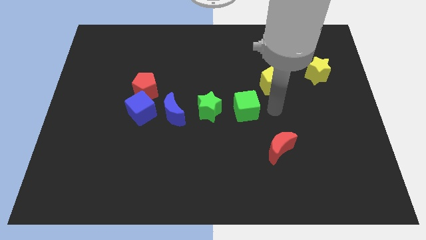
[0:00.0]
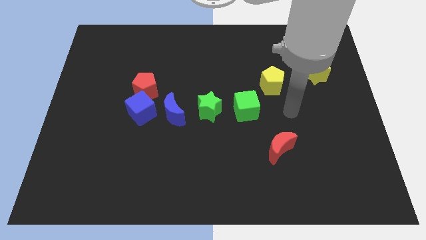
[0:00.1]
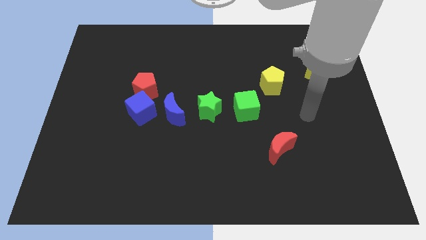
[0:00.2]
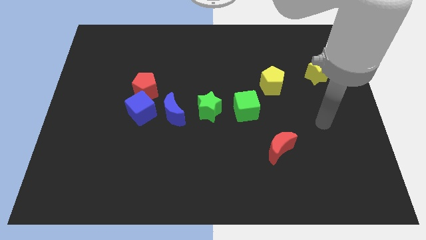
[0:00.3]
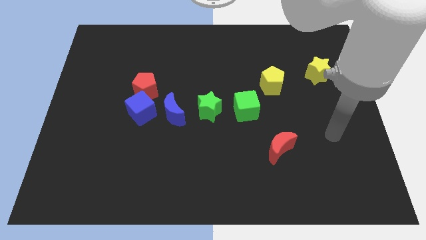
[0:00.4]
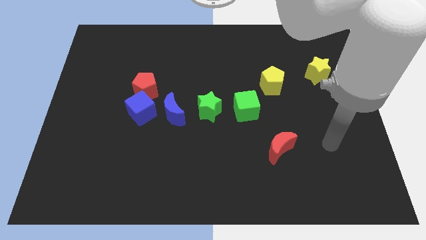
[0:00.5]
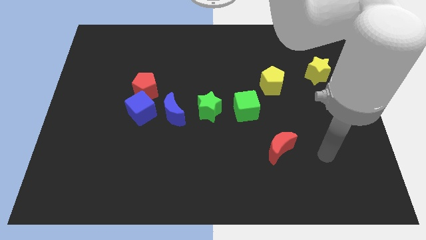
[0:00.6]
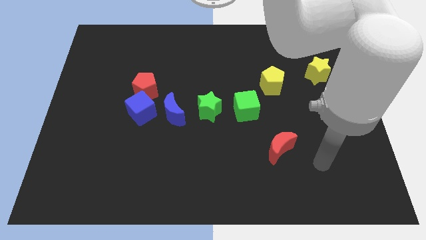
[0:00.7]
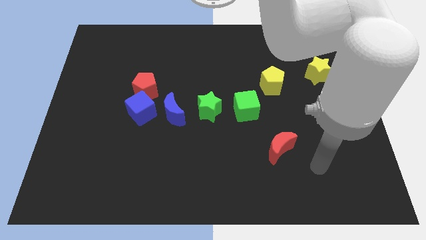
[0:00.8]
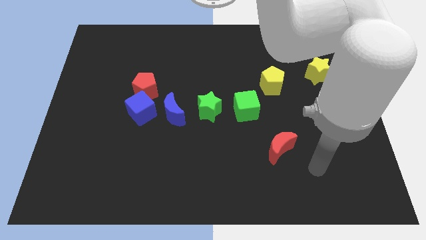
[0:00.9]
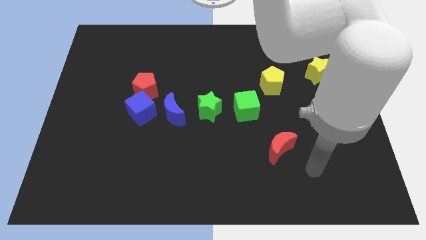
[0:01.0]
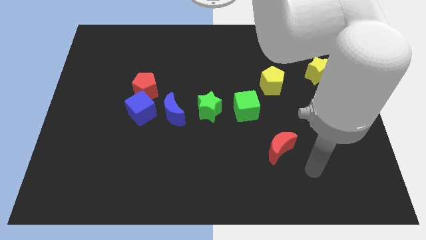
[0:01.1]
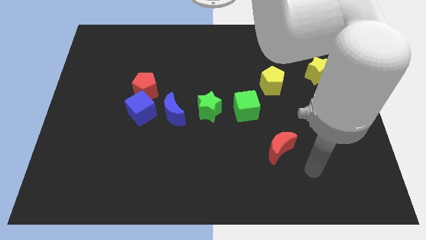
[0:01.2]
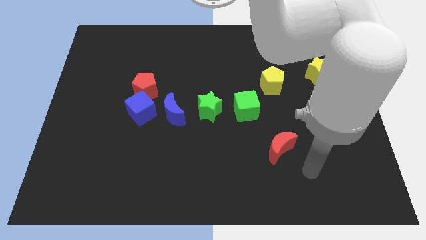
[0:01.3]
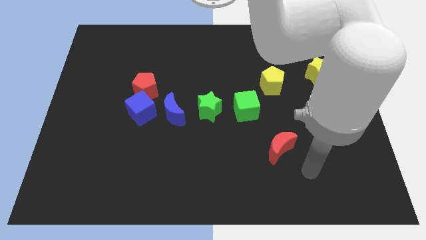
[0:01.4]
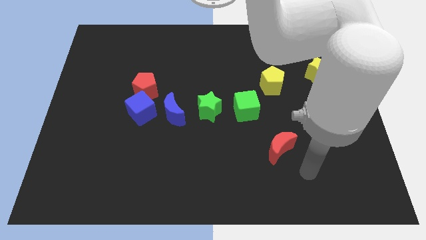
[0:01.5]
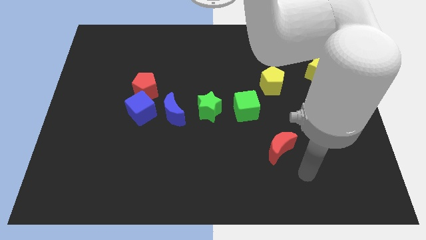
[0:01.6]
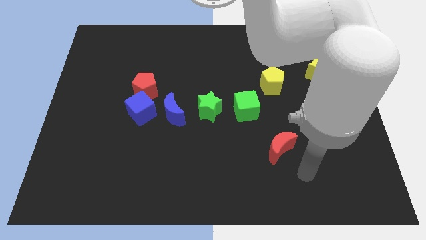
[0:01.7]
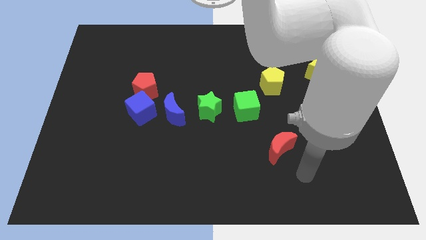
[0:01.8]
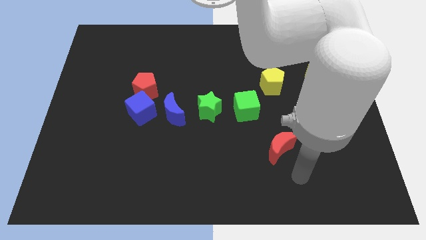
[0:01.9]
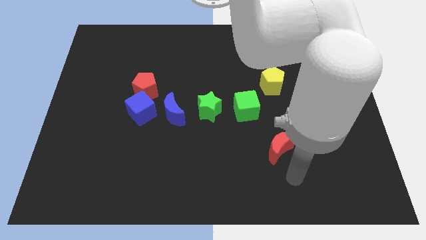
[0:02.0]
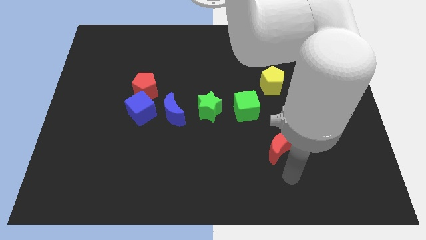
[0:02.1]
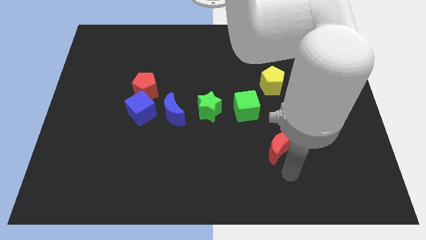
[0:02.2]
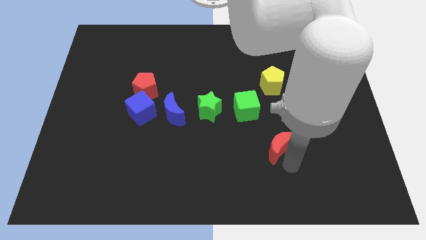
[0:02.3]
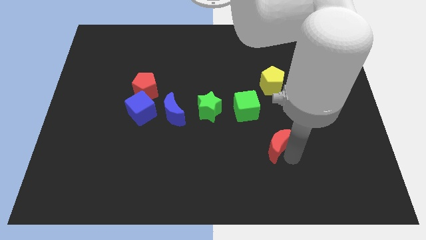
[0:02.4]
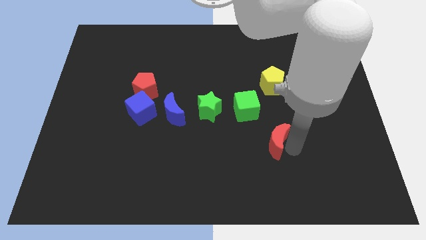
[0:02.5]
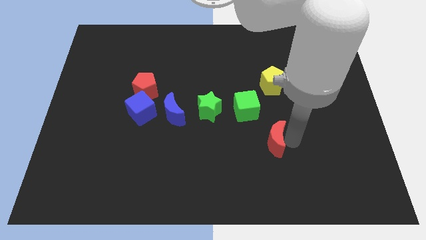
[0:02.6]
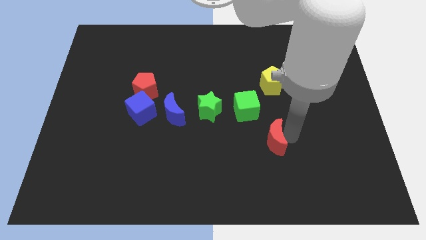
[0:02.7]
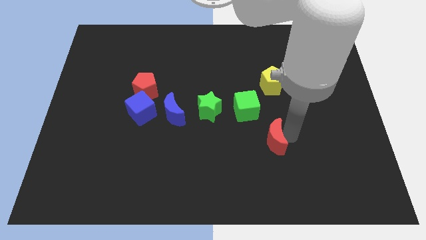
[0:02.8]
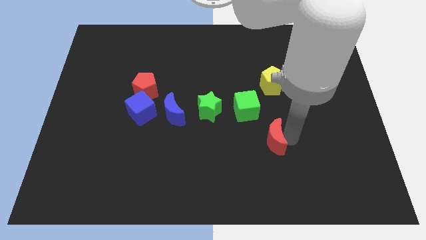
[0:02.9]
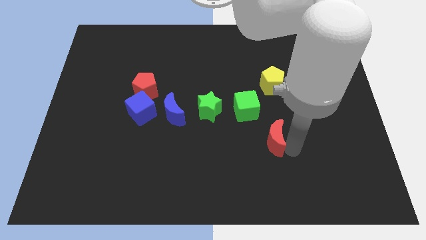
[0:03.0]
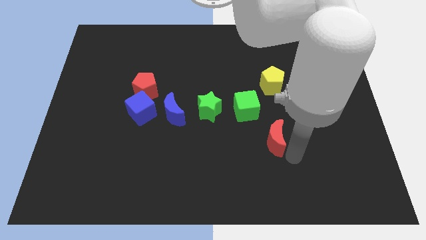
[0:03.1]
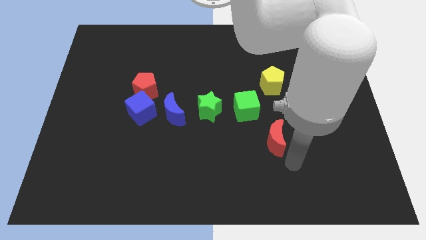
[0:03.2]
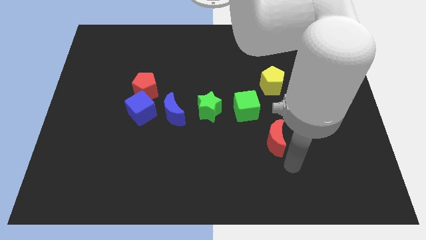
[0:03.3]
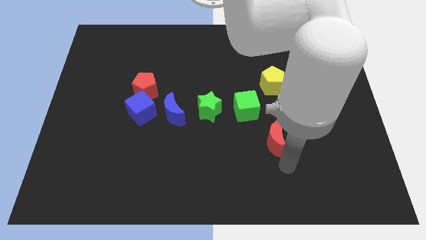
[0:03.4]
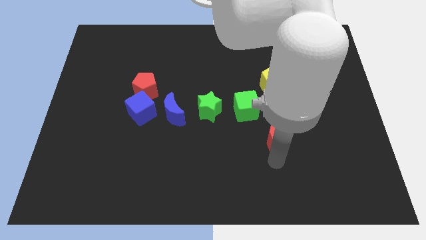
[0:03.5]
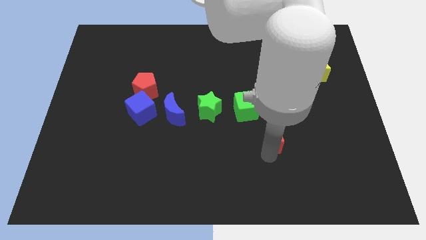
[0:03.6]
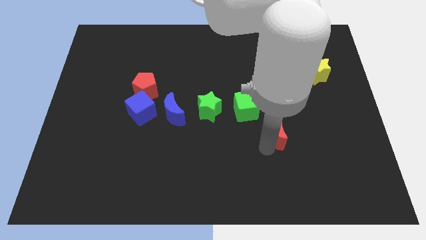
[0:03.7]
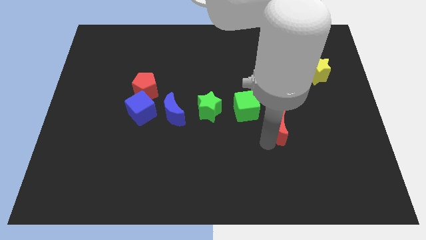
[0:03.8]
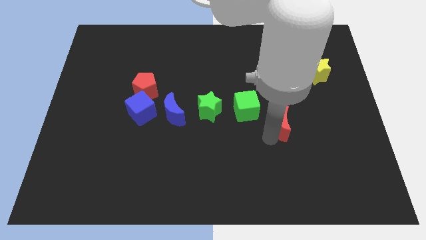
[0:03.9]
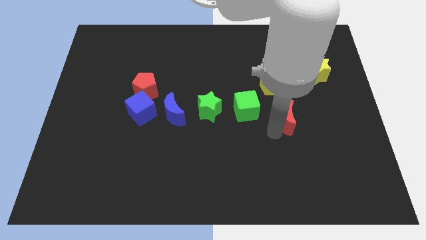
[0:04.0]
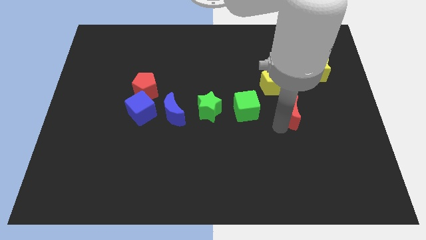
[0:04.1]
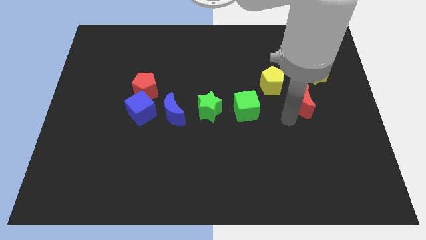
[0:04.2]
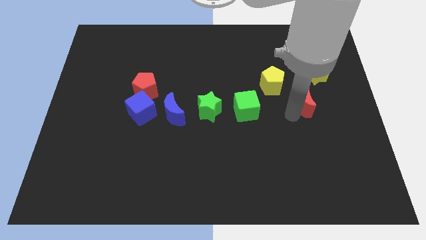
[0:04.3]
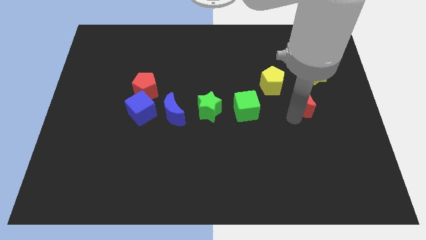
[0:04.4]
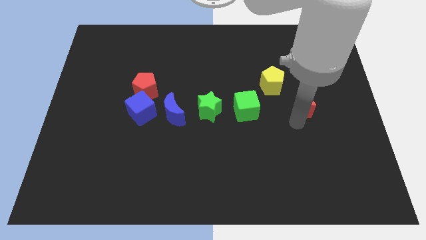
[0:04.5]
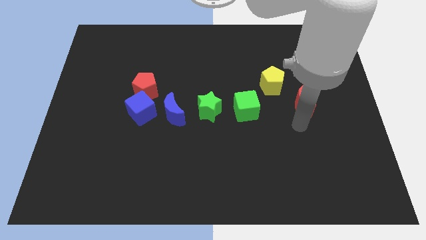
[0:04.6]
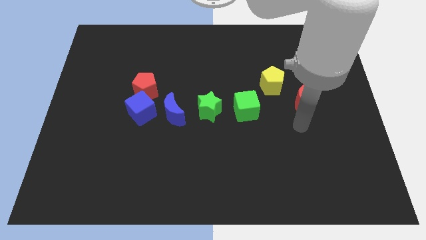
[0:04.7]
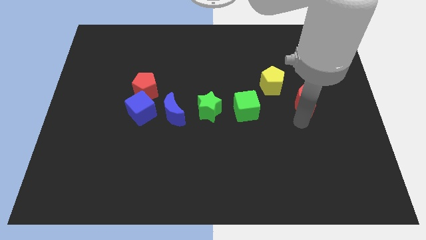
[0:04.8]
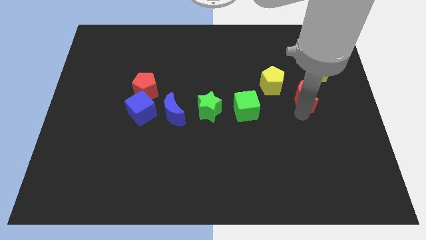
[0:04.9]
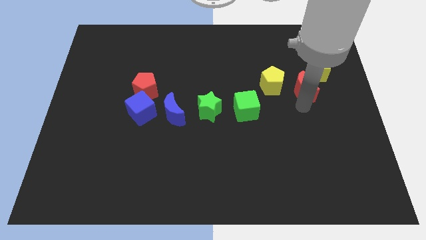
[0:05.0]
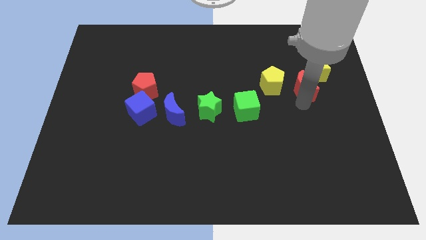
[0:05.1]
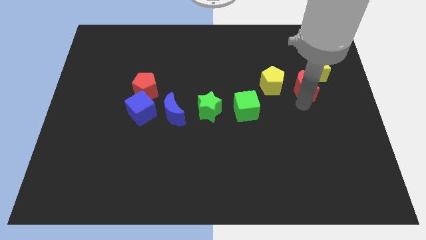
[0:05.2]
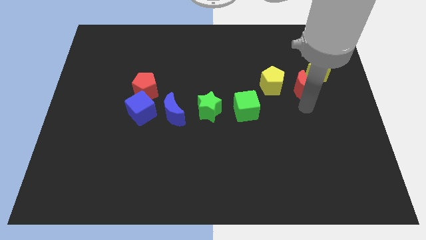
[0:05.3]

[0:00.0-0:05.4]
move red moon slightly to the yellow blocks

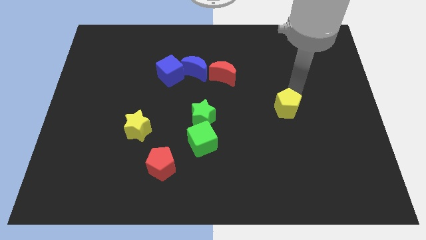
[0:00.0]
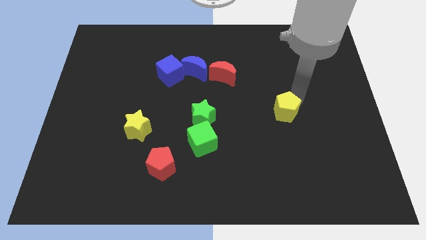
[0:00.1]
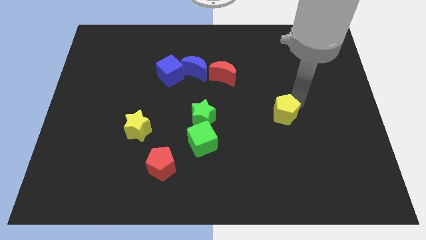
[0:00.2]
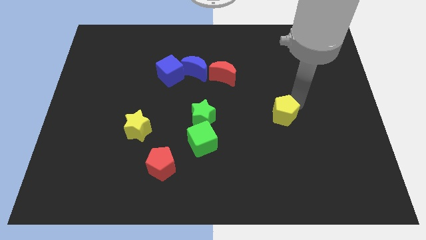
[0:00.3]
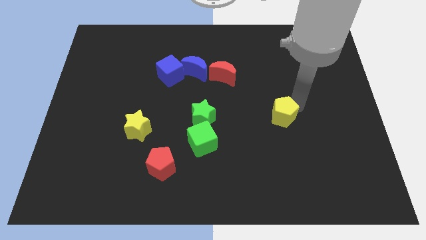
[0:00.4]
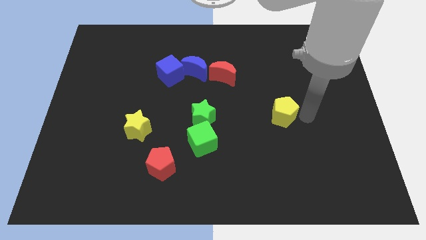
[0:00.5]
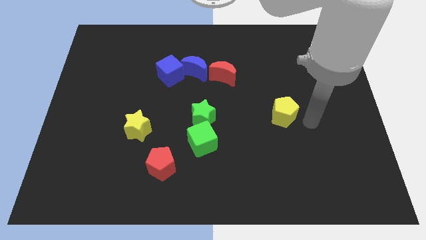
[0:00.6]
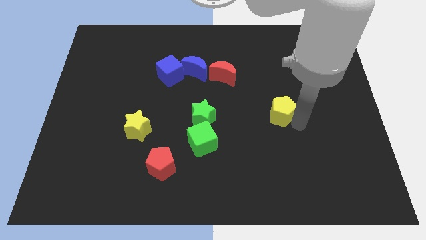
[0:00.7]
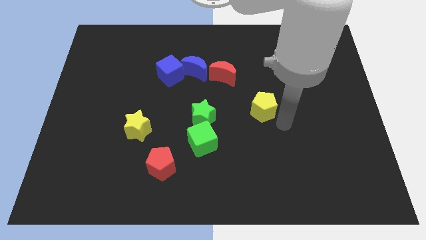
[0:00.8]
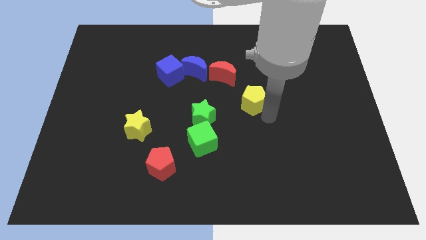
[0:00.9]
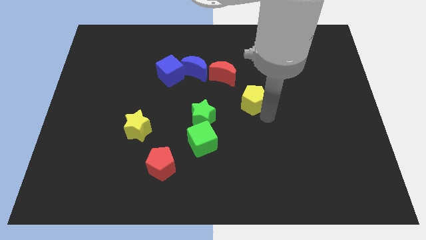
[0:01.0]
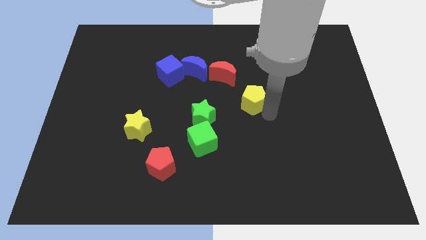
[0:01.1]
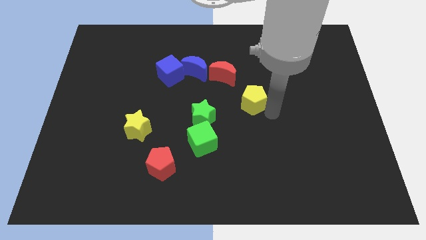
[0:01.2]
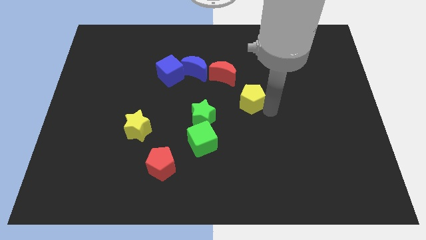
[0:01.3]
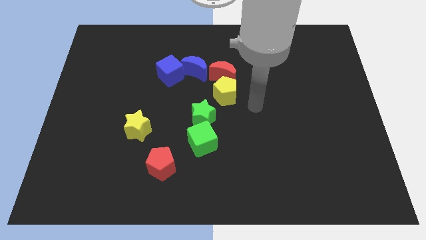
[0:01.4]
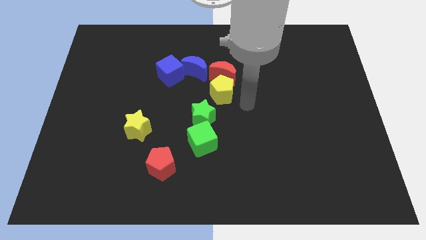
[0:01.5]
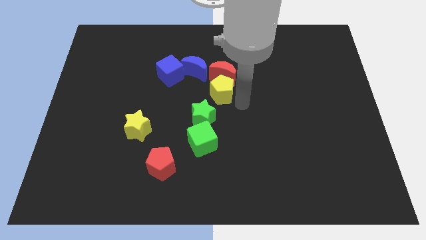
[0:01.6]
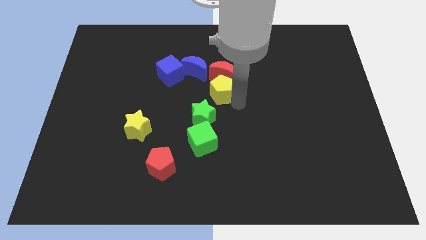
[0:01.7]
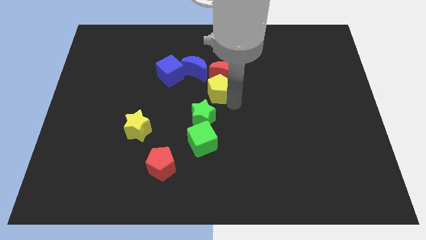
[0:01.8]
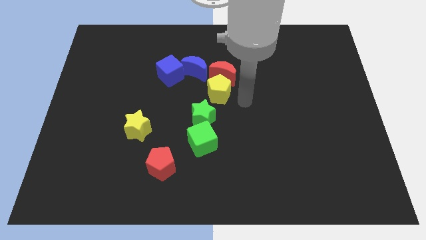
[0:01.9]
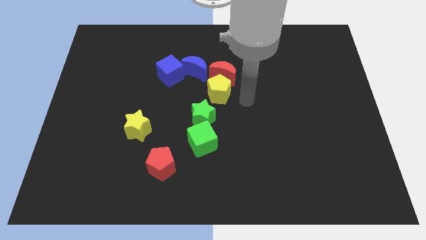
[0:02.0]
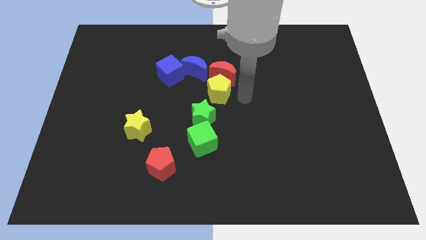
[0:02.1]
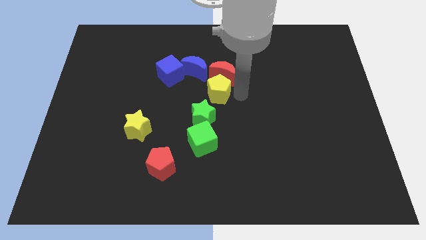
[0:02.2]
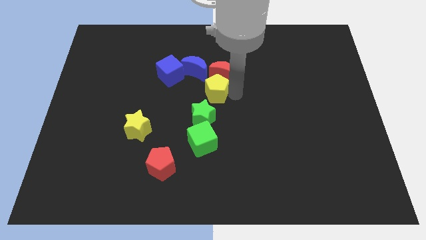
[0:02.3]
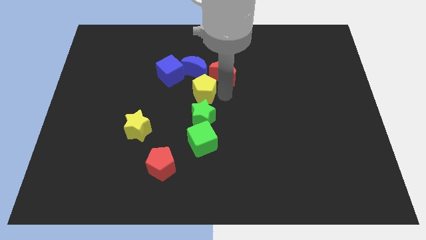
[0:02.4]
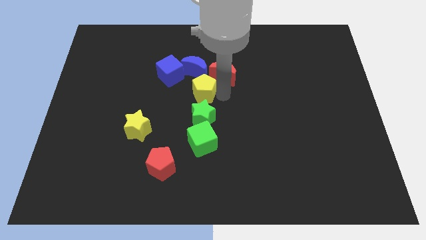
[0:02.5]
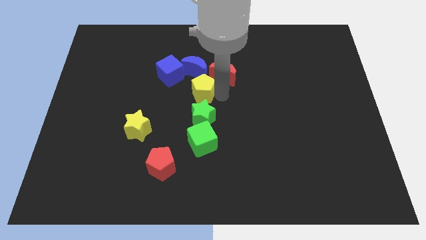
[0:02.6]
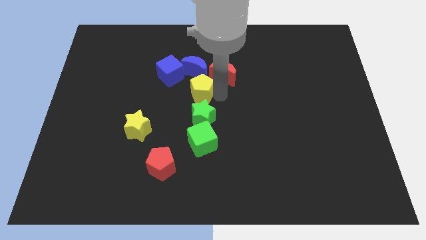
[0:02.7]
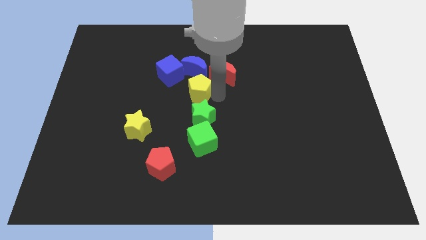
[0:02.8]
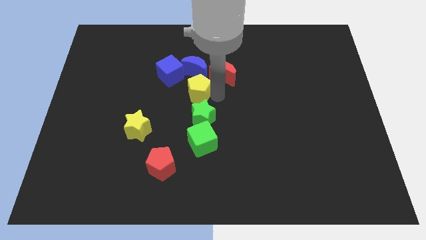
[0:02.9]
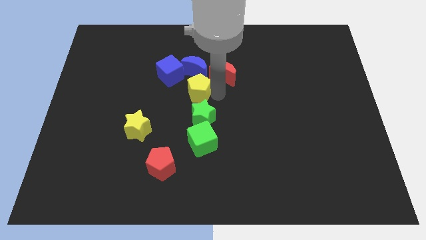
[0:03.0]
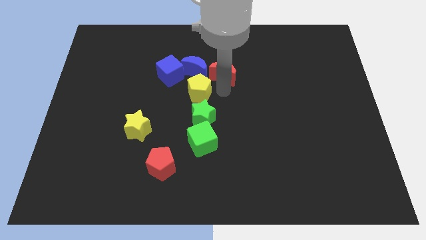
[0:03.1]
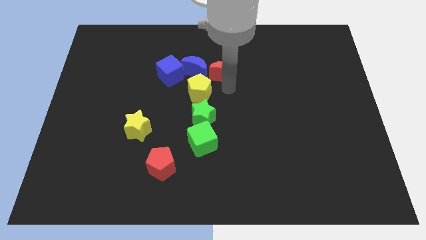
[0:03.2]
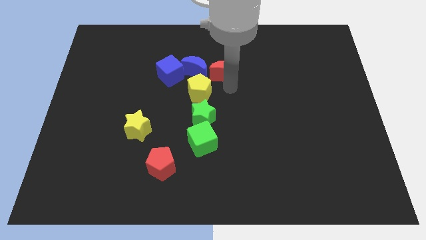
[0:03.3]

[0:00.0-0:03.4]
move the yellow pentagon to the top of the green star

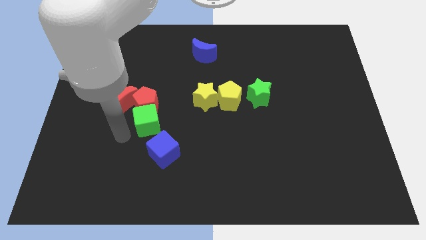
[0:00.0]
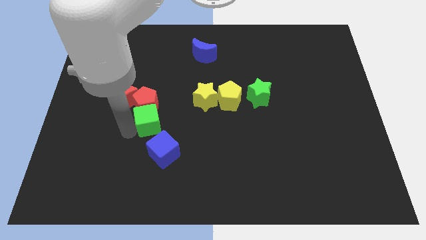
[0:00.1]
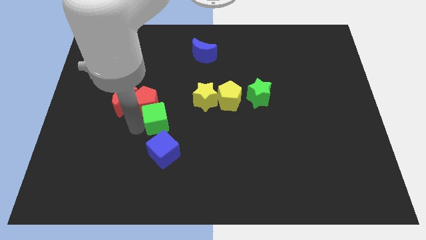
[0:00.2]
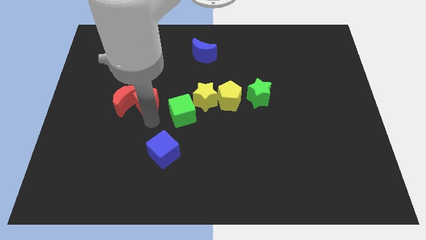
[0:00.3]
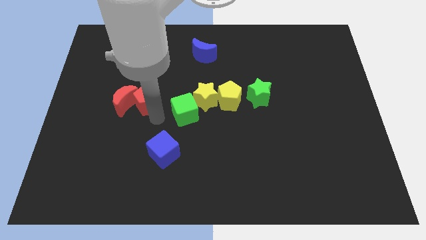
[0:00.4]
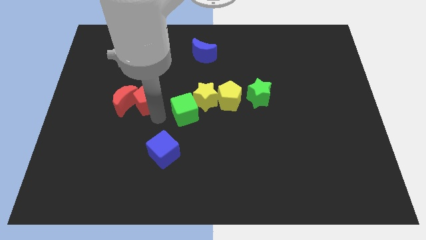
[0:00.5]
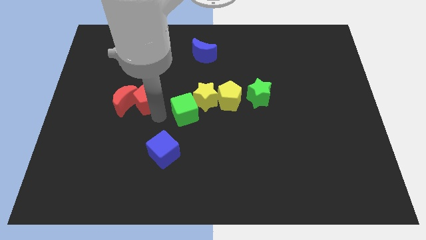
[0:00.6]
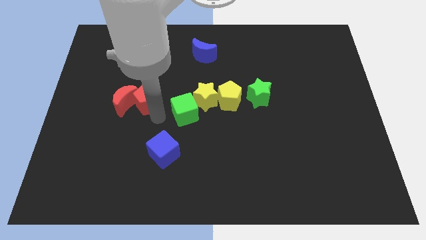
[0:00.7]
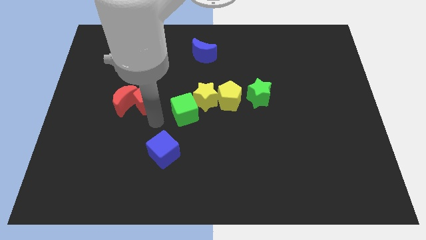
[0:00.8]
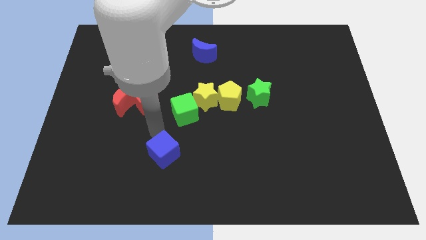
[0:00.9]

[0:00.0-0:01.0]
slide the green cube into the yellow star
